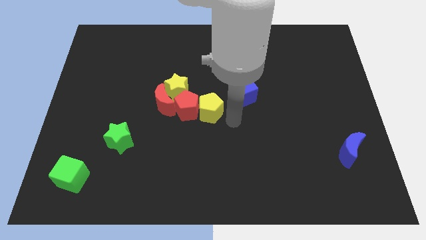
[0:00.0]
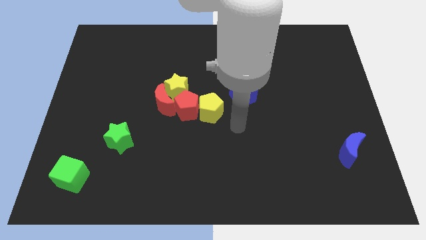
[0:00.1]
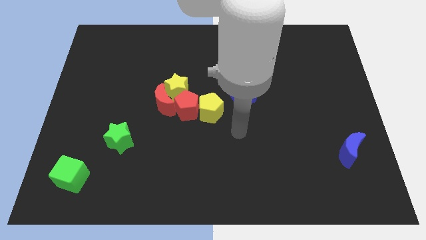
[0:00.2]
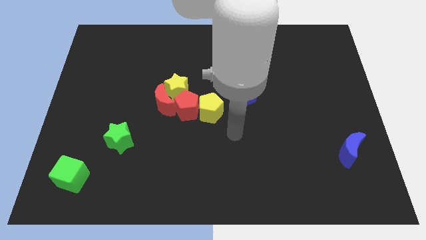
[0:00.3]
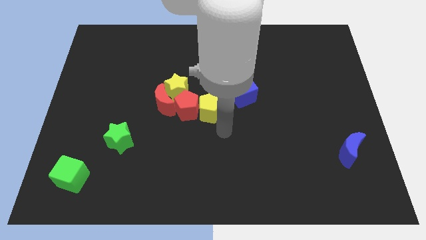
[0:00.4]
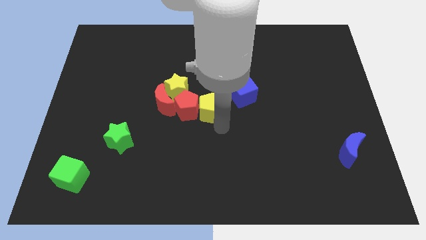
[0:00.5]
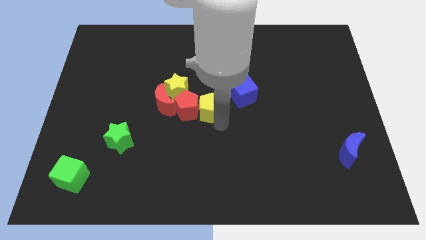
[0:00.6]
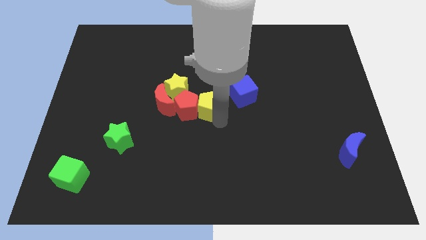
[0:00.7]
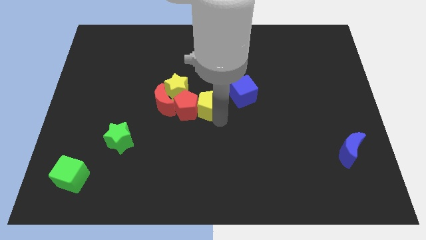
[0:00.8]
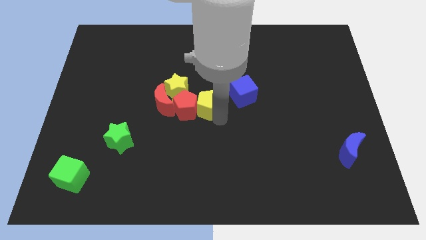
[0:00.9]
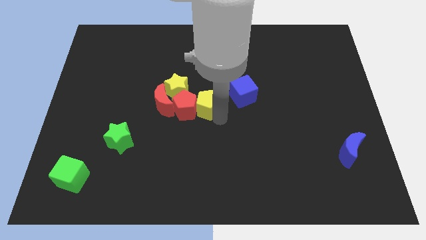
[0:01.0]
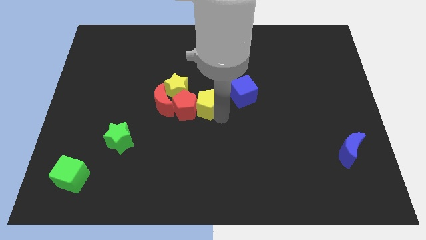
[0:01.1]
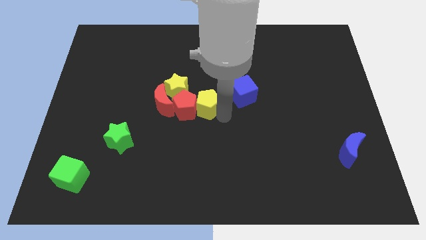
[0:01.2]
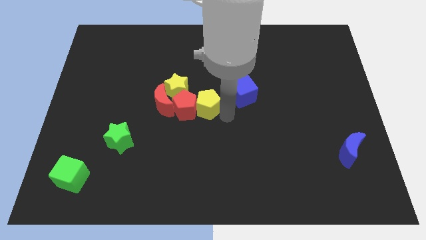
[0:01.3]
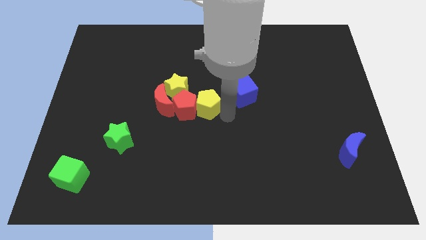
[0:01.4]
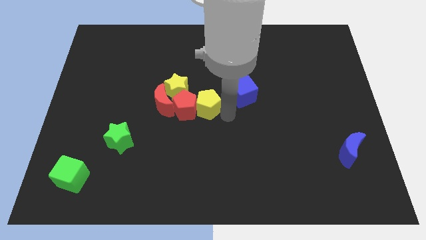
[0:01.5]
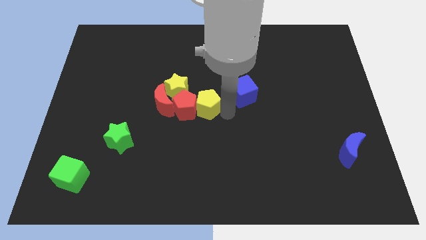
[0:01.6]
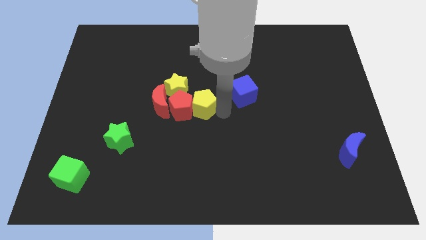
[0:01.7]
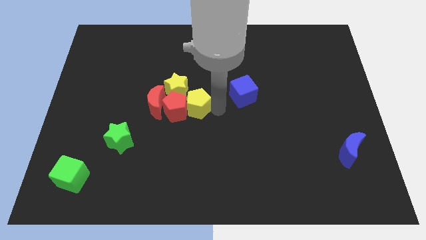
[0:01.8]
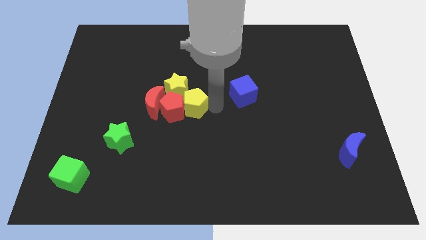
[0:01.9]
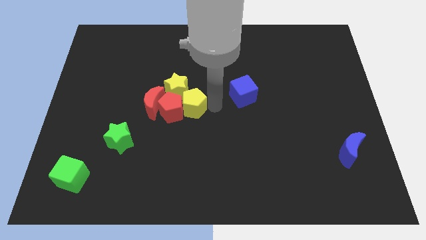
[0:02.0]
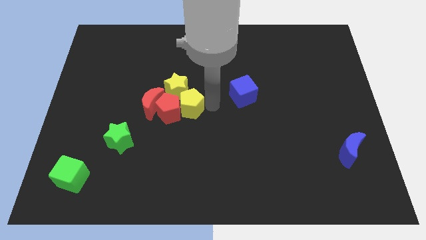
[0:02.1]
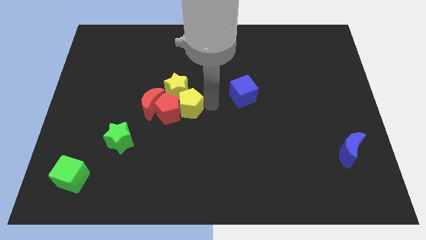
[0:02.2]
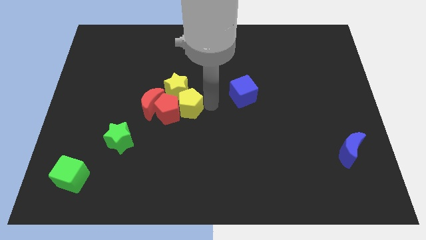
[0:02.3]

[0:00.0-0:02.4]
push the yellow pentagon into red blocks to the right

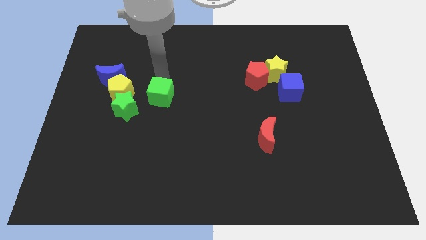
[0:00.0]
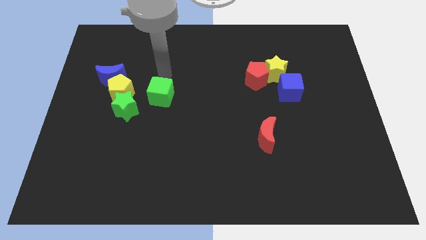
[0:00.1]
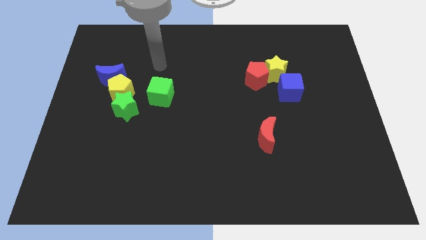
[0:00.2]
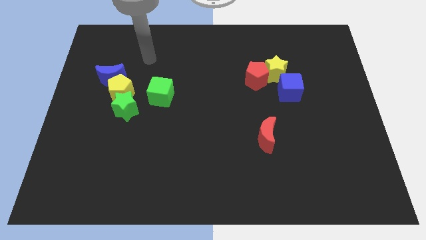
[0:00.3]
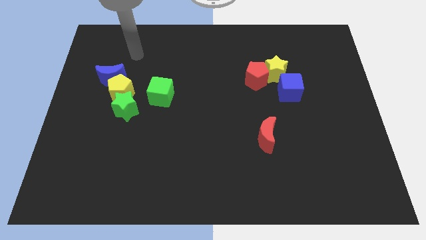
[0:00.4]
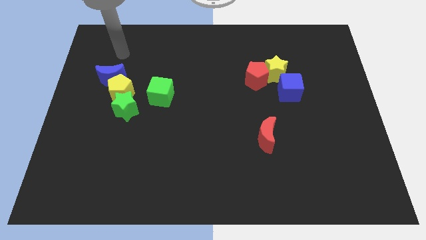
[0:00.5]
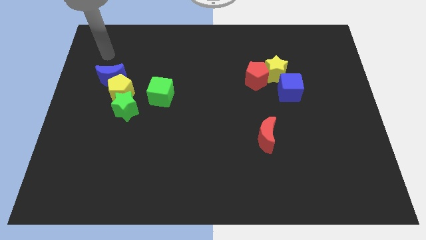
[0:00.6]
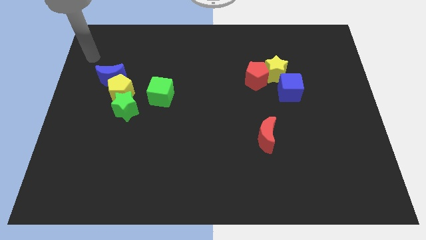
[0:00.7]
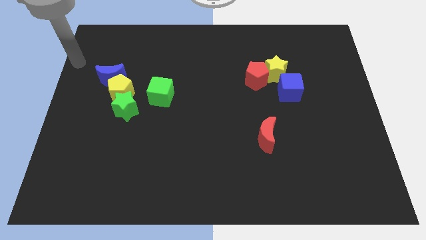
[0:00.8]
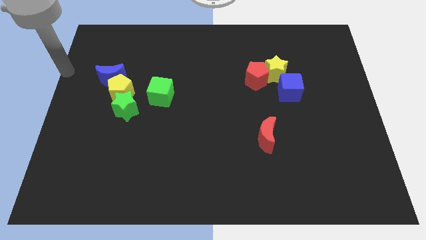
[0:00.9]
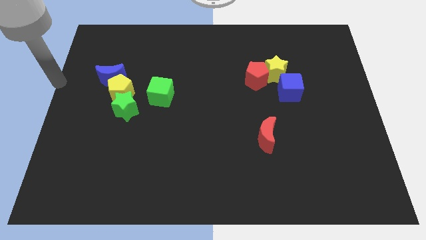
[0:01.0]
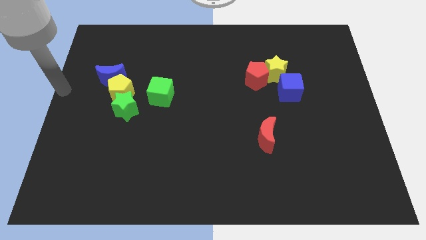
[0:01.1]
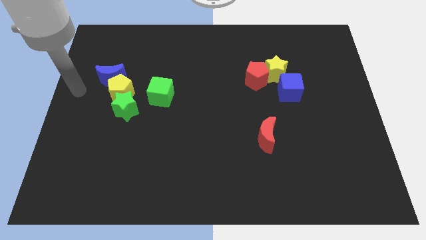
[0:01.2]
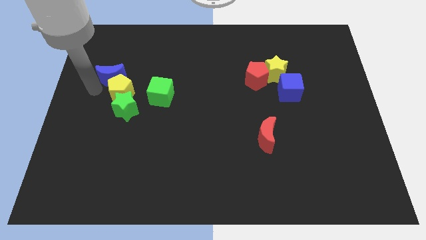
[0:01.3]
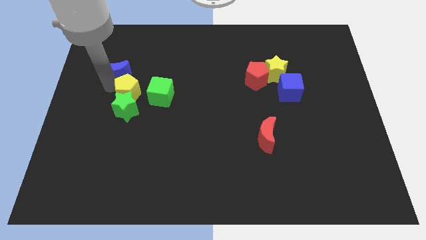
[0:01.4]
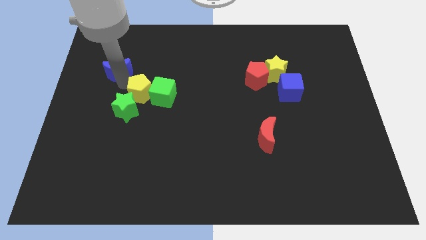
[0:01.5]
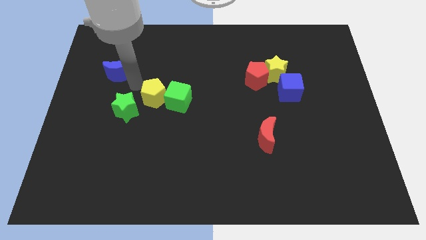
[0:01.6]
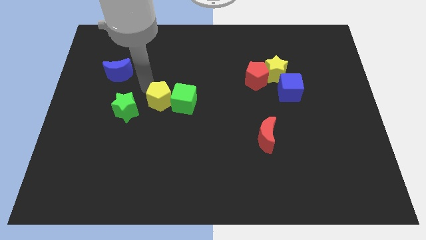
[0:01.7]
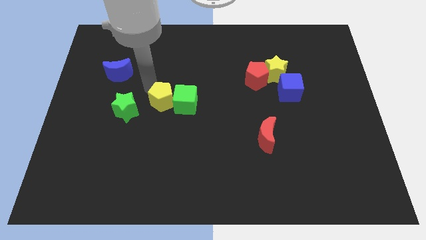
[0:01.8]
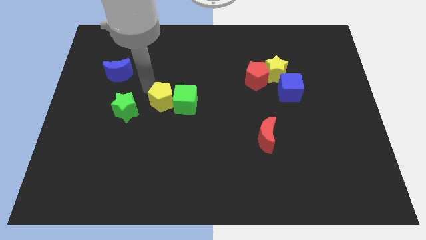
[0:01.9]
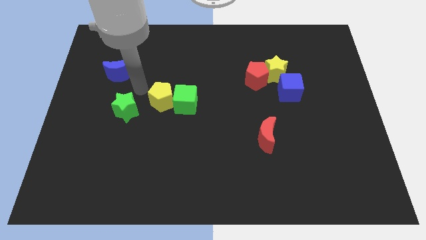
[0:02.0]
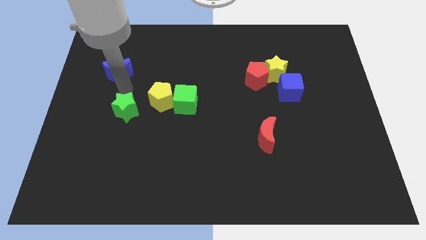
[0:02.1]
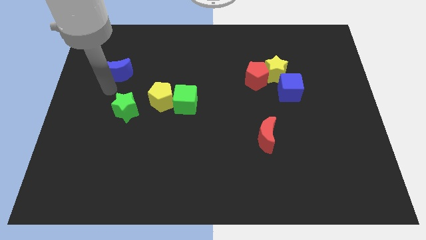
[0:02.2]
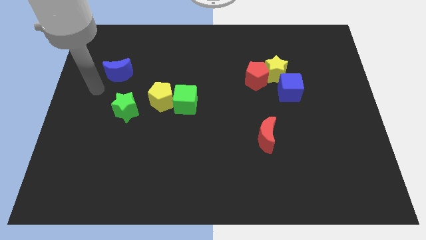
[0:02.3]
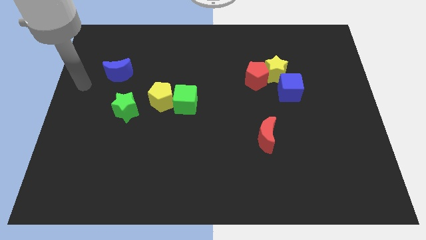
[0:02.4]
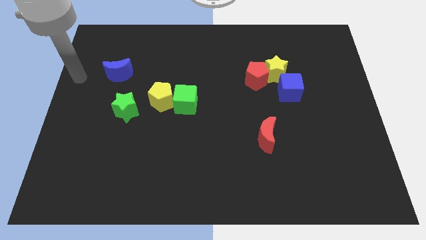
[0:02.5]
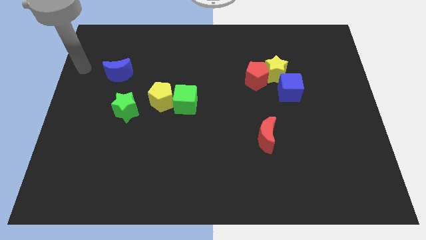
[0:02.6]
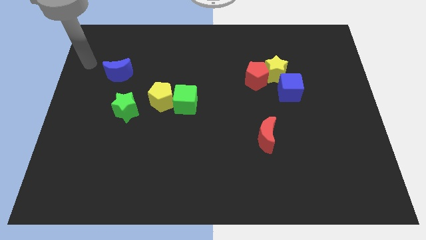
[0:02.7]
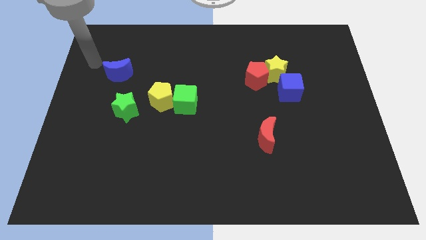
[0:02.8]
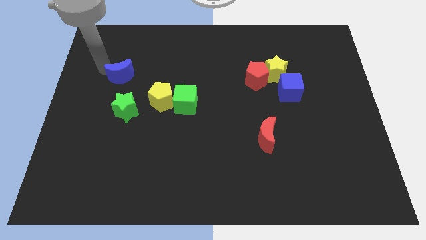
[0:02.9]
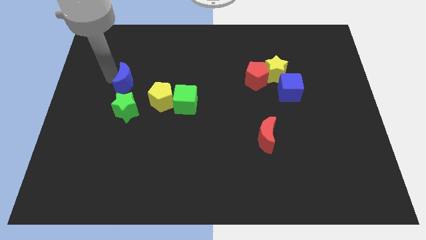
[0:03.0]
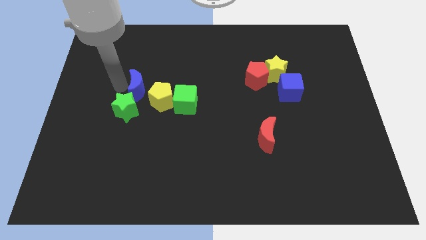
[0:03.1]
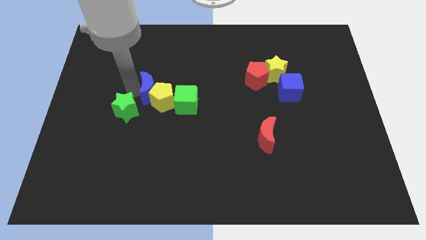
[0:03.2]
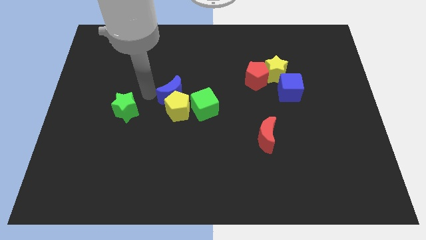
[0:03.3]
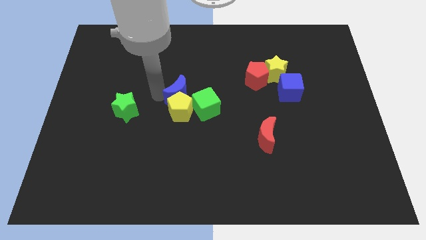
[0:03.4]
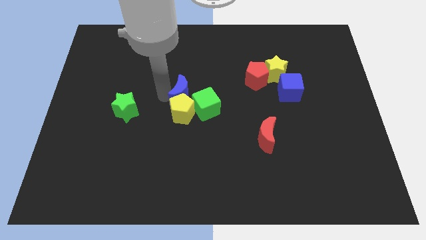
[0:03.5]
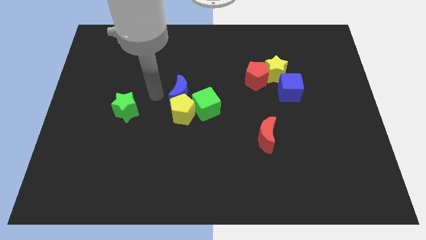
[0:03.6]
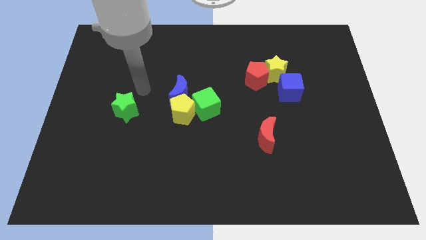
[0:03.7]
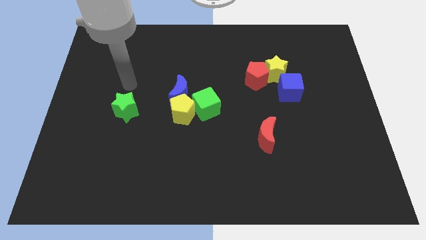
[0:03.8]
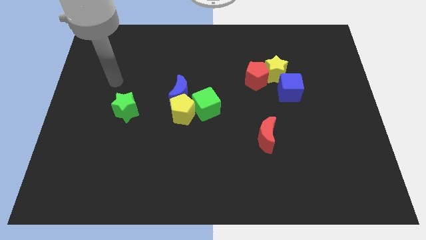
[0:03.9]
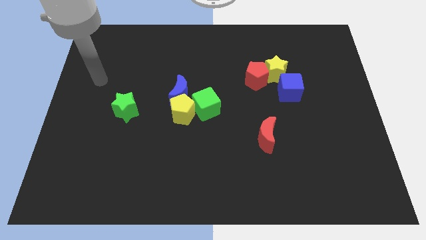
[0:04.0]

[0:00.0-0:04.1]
move the yellow pentagon green cube and blue moon towards center

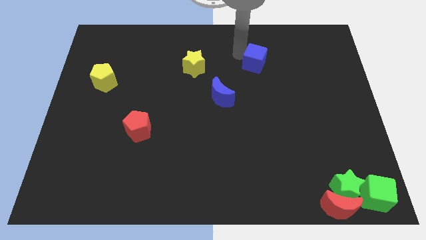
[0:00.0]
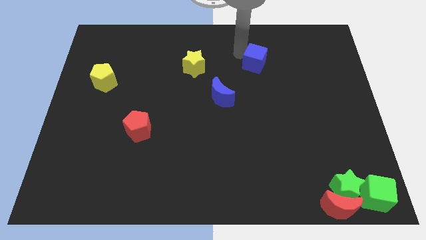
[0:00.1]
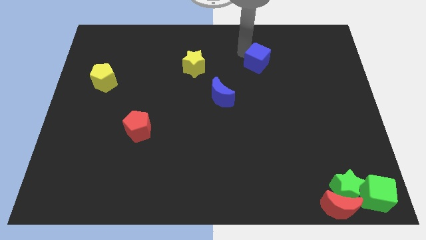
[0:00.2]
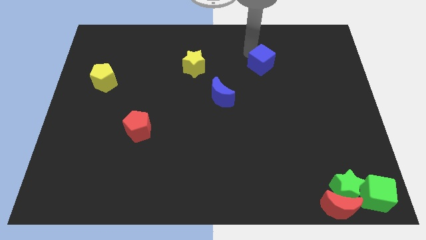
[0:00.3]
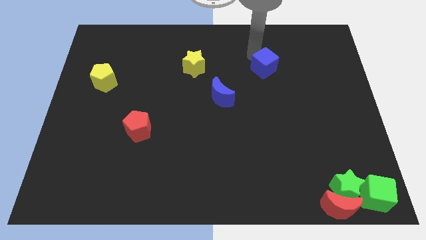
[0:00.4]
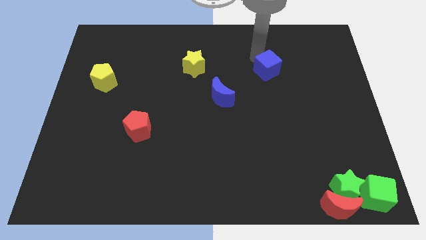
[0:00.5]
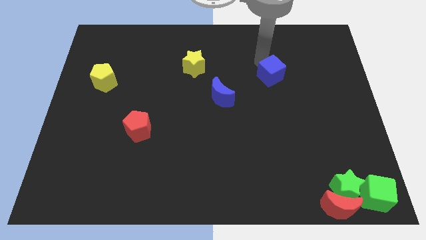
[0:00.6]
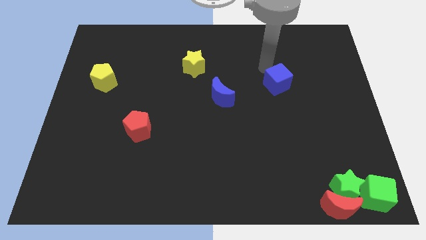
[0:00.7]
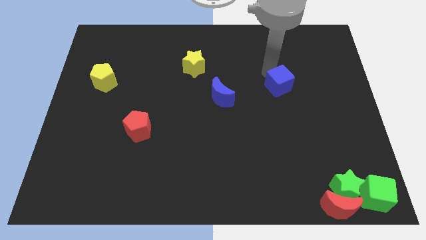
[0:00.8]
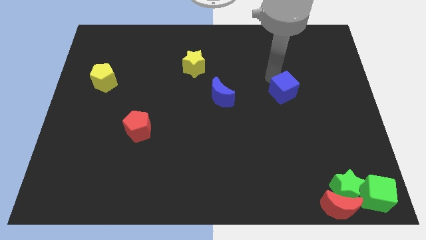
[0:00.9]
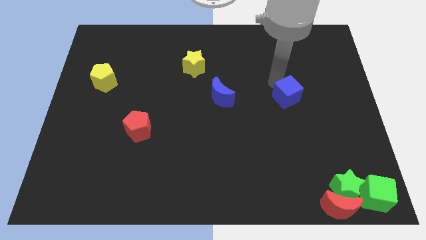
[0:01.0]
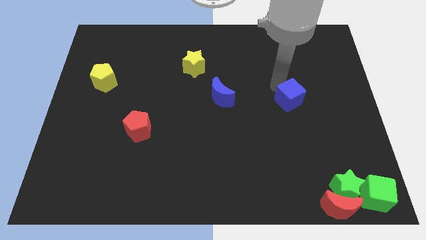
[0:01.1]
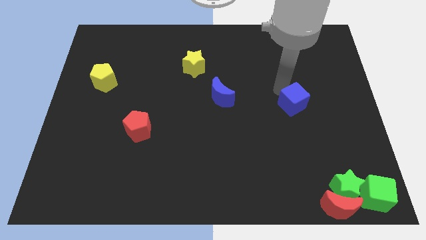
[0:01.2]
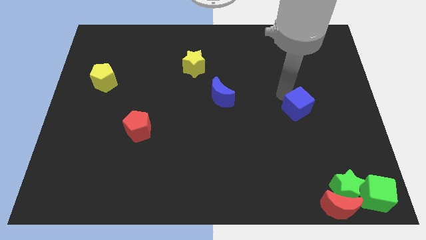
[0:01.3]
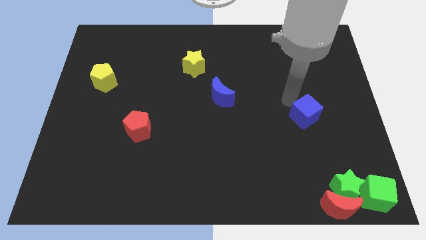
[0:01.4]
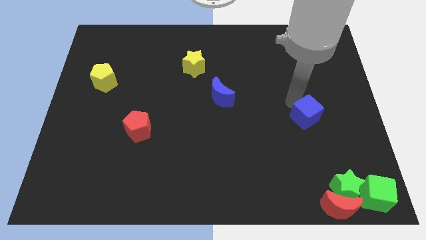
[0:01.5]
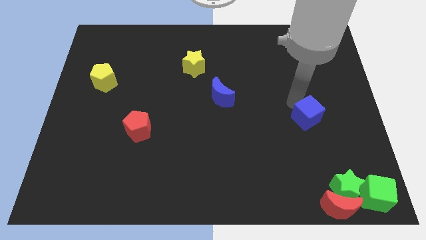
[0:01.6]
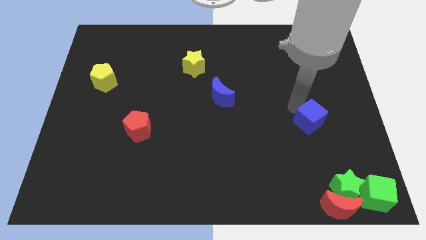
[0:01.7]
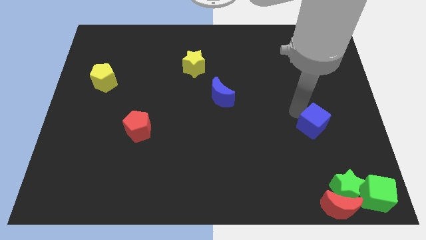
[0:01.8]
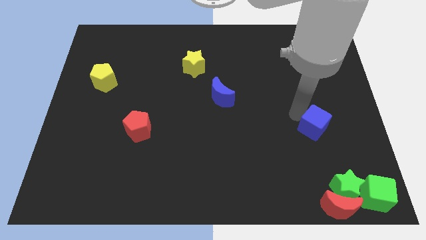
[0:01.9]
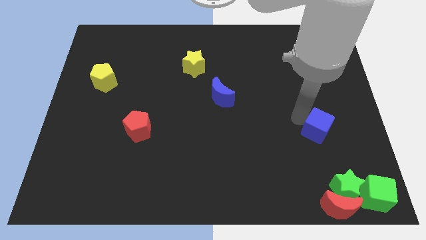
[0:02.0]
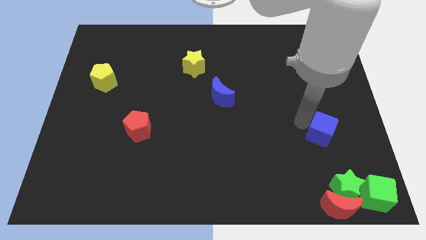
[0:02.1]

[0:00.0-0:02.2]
push the blue cube towards the green cube

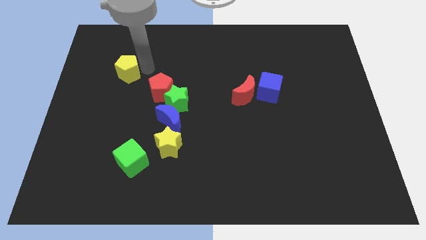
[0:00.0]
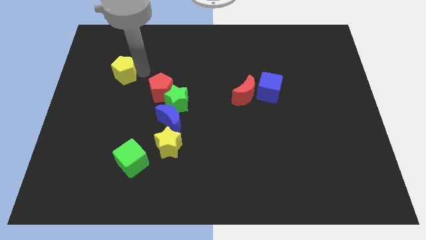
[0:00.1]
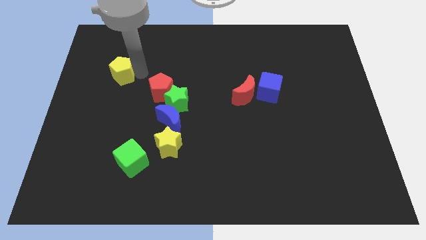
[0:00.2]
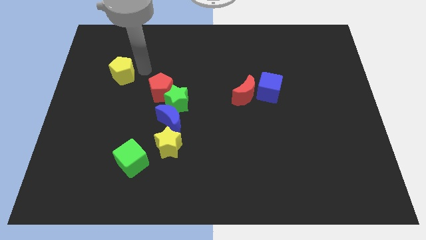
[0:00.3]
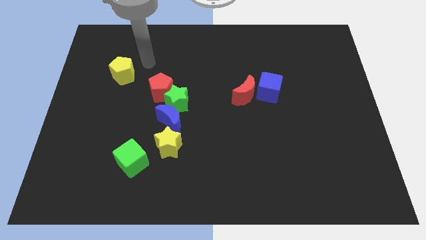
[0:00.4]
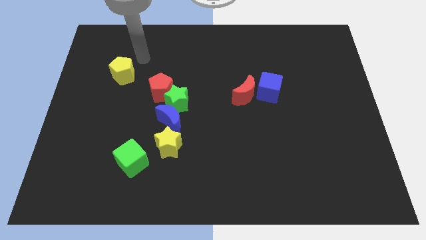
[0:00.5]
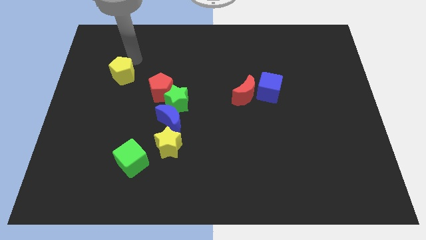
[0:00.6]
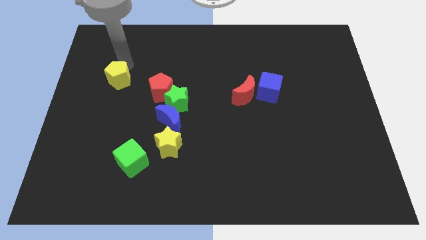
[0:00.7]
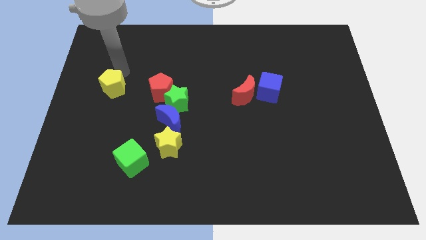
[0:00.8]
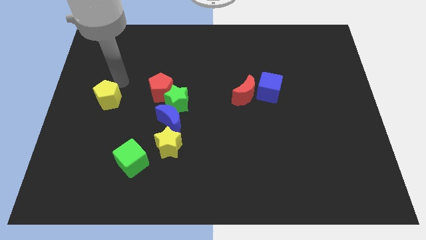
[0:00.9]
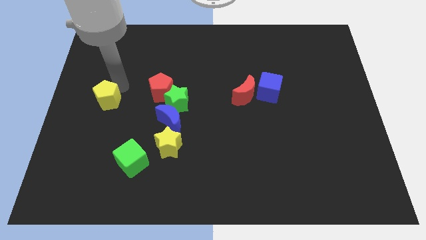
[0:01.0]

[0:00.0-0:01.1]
place the yellow pentagon diagonally top left to the green cube
